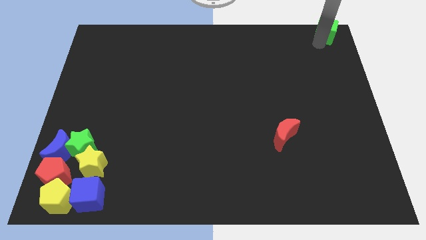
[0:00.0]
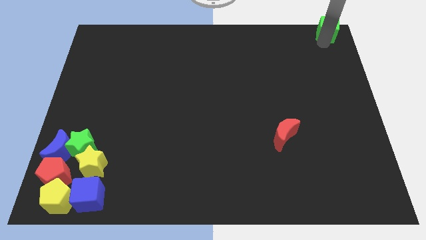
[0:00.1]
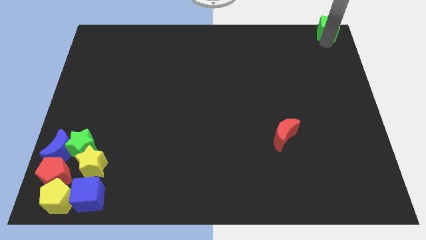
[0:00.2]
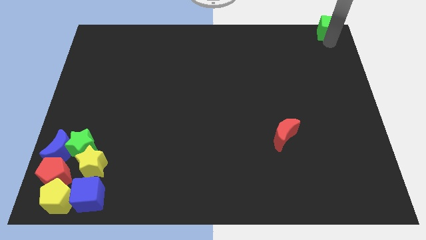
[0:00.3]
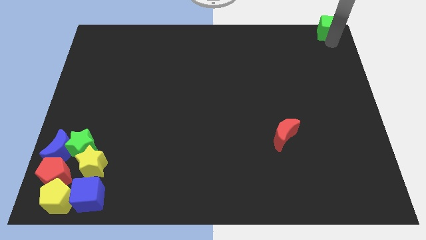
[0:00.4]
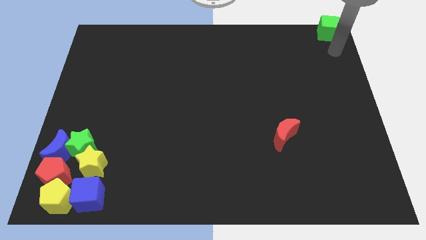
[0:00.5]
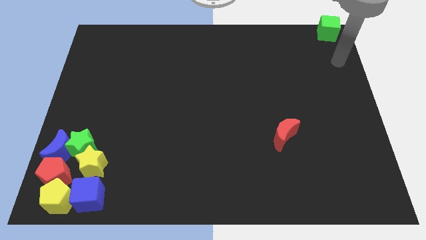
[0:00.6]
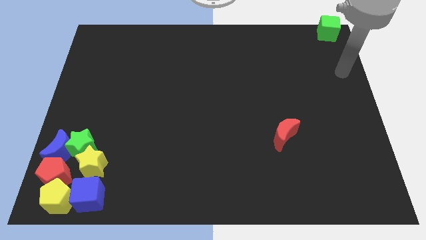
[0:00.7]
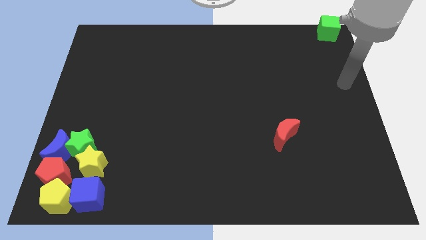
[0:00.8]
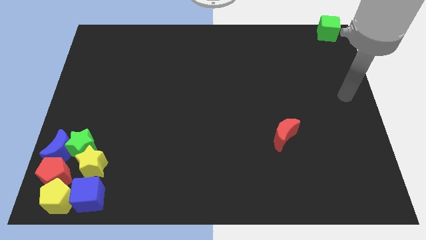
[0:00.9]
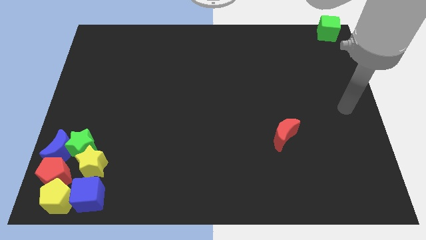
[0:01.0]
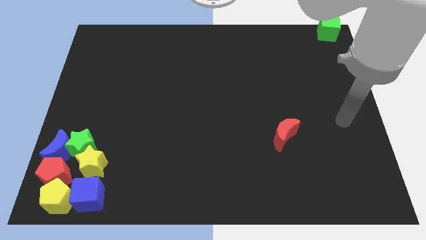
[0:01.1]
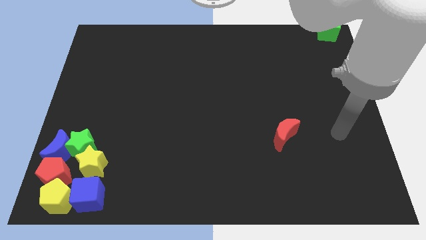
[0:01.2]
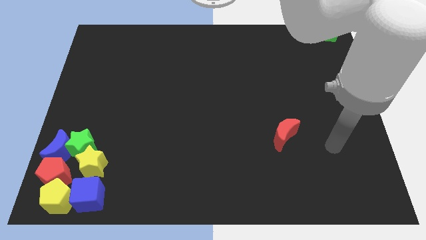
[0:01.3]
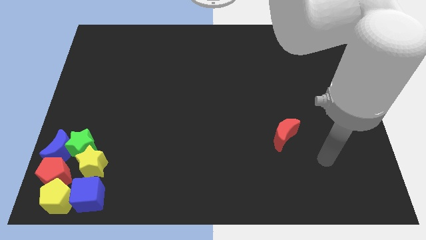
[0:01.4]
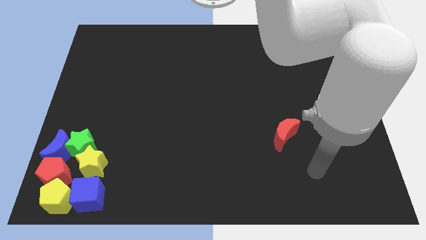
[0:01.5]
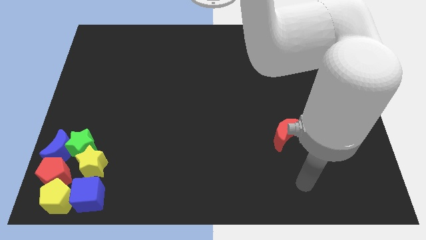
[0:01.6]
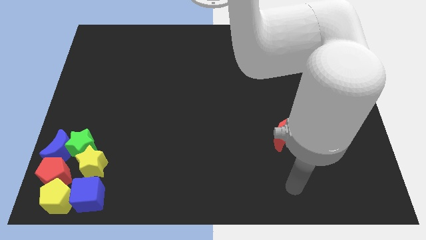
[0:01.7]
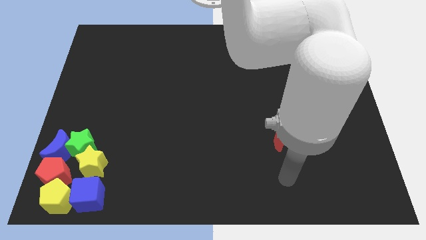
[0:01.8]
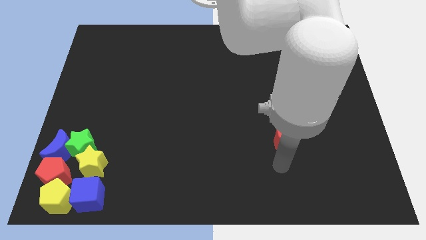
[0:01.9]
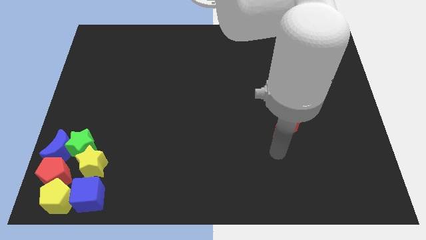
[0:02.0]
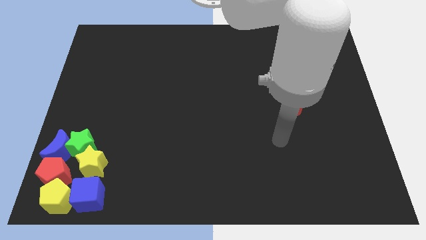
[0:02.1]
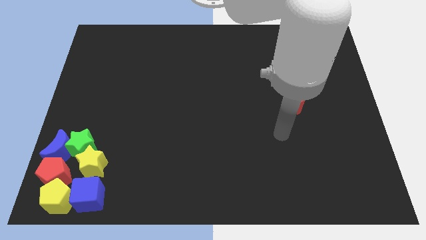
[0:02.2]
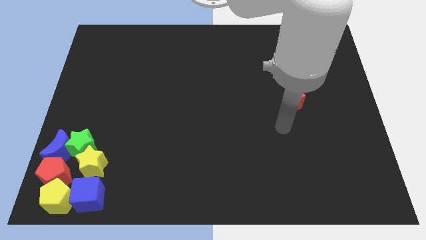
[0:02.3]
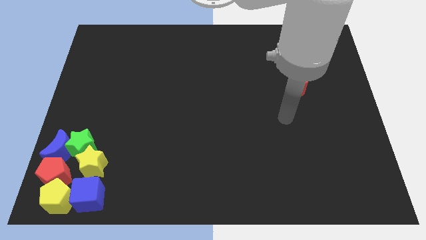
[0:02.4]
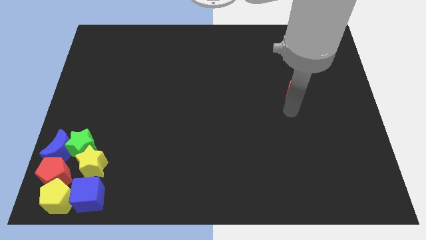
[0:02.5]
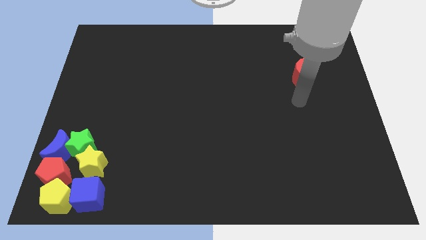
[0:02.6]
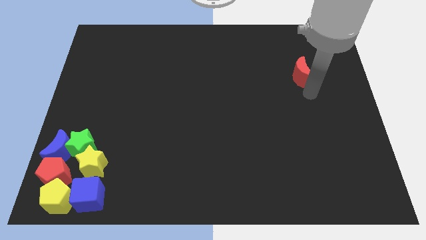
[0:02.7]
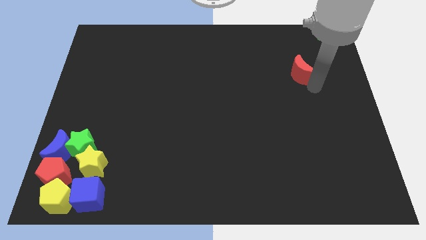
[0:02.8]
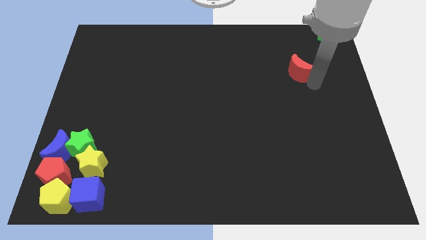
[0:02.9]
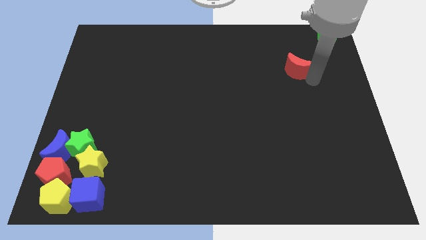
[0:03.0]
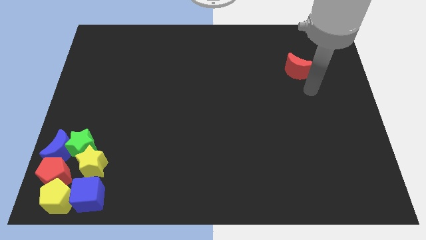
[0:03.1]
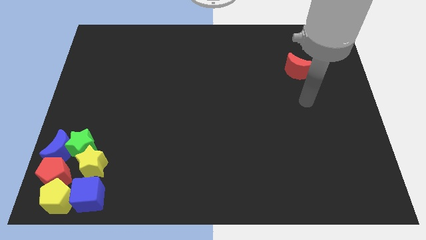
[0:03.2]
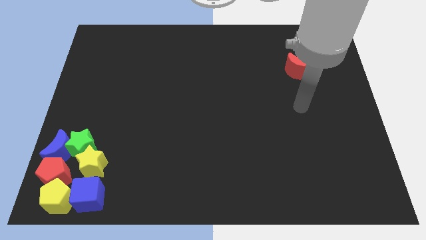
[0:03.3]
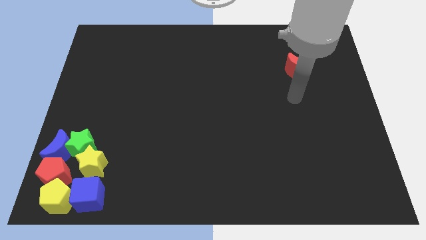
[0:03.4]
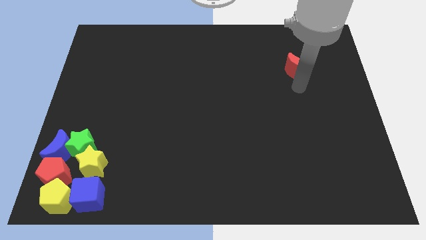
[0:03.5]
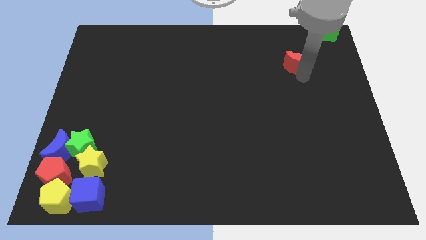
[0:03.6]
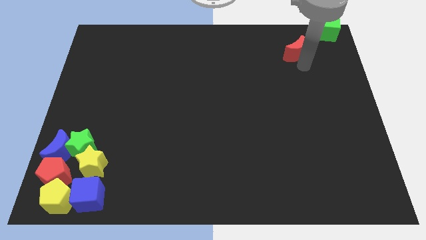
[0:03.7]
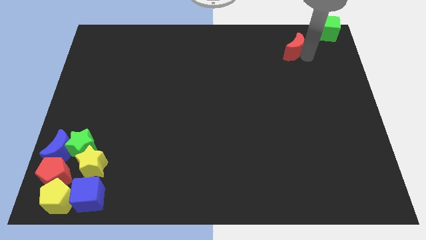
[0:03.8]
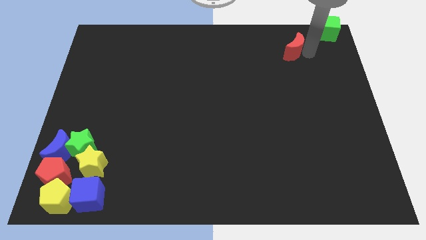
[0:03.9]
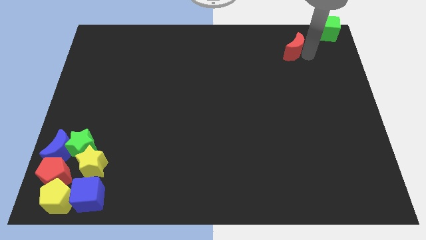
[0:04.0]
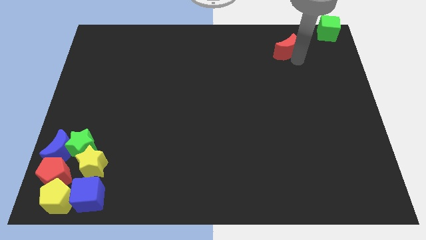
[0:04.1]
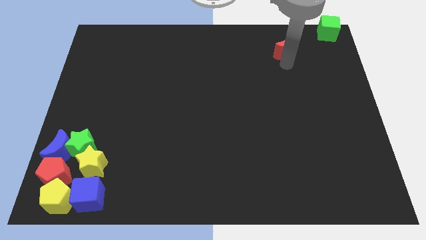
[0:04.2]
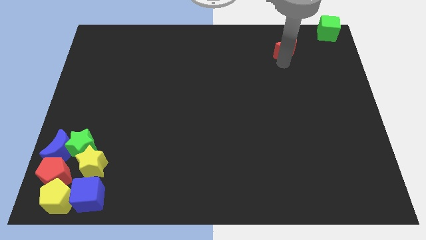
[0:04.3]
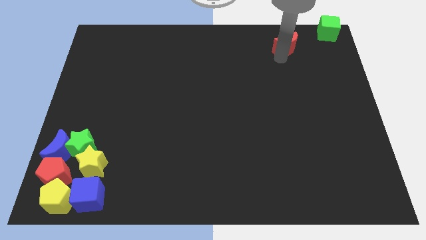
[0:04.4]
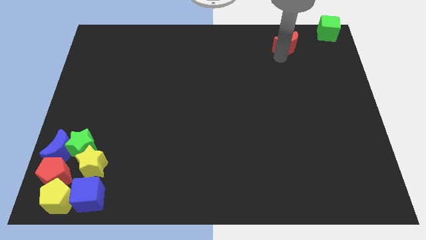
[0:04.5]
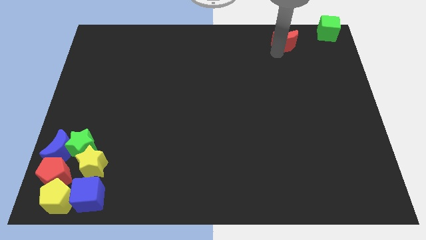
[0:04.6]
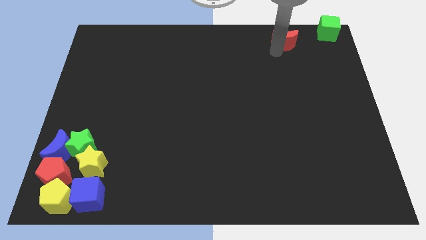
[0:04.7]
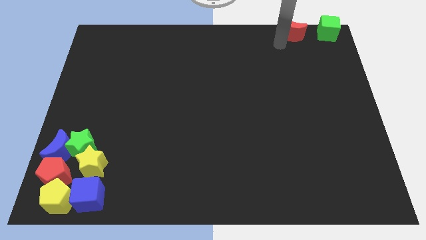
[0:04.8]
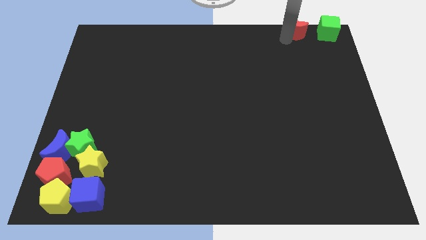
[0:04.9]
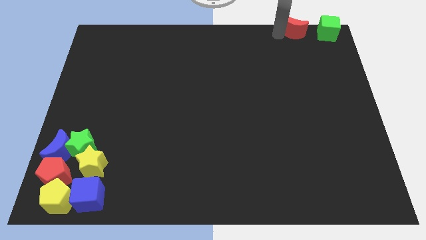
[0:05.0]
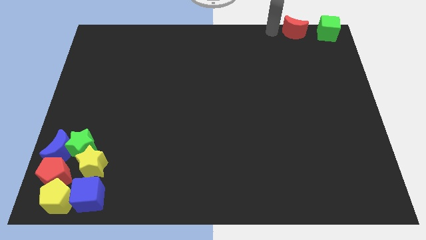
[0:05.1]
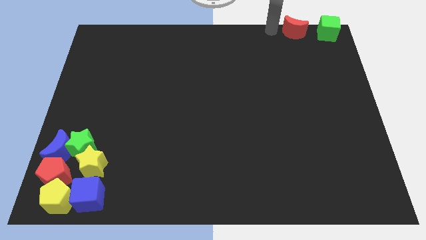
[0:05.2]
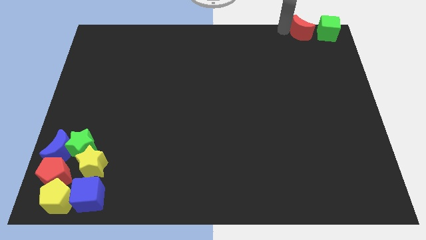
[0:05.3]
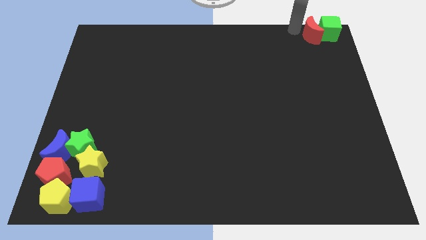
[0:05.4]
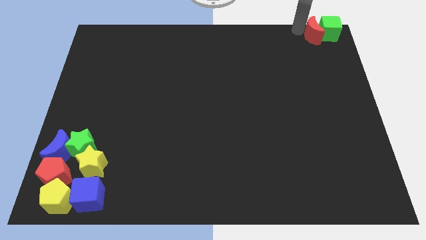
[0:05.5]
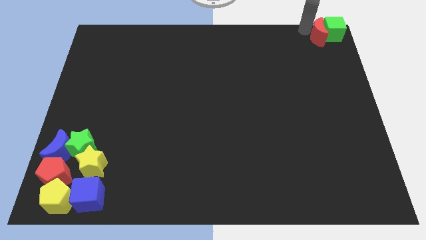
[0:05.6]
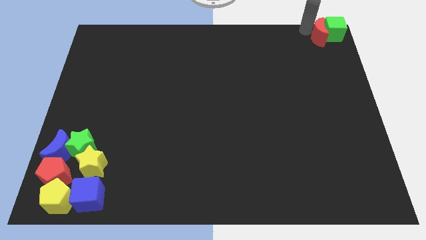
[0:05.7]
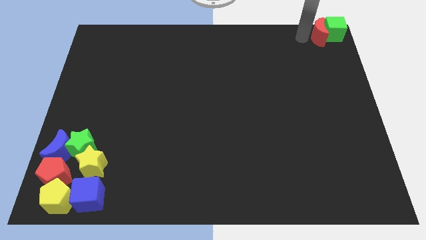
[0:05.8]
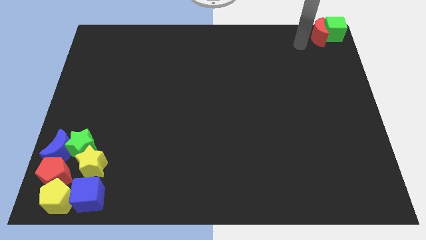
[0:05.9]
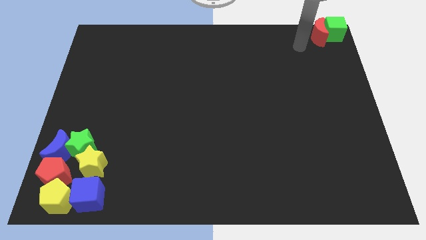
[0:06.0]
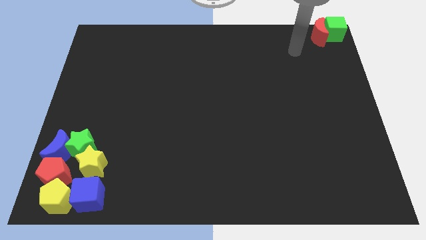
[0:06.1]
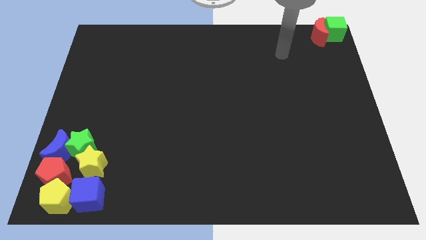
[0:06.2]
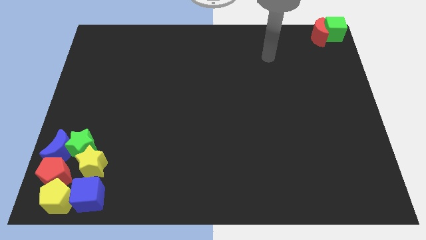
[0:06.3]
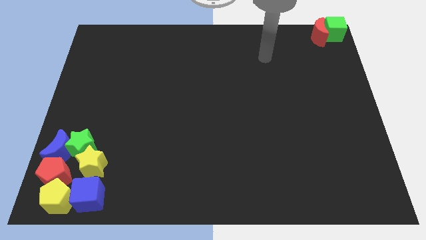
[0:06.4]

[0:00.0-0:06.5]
place red moon into green cube

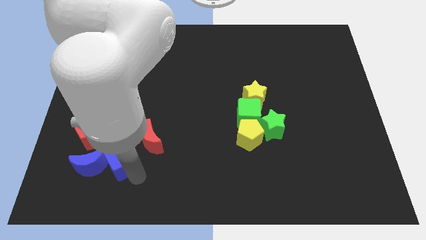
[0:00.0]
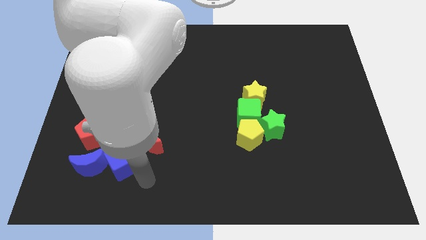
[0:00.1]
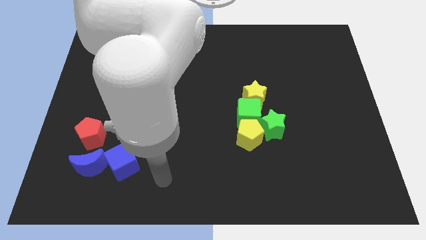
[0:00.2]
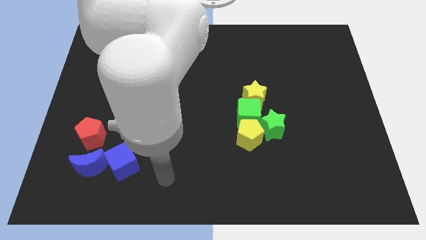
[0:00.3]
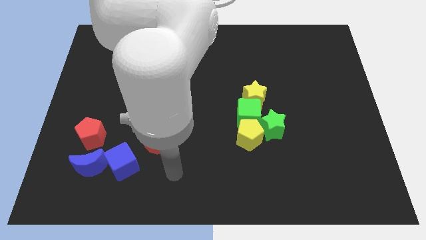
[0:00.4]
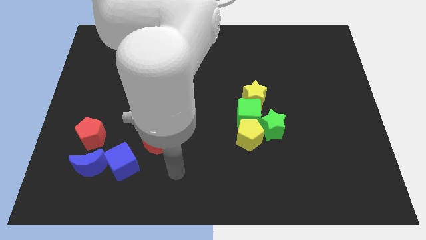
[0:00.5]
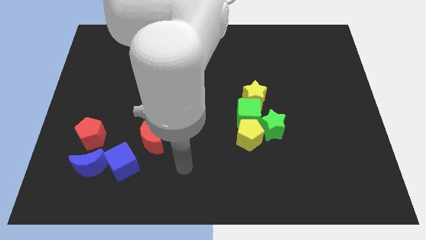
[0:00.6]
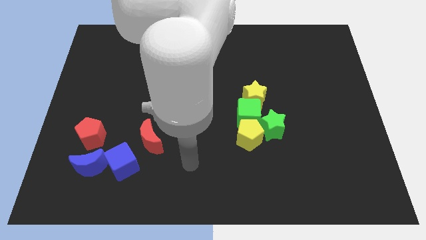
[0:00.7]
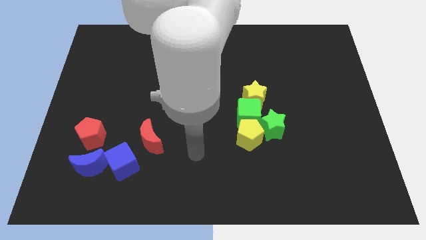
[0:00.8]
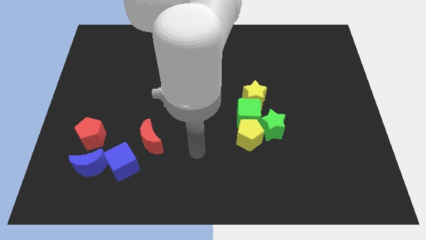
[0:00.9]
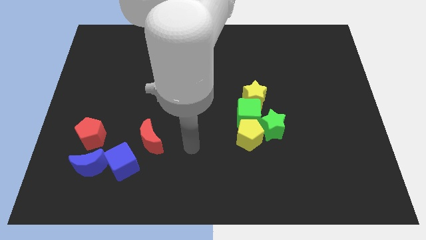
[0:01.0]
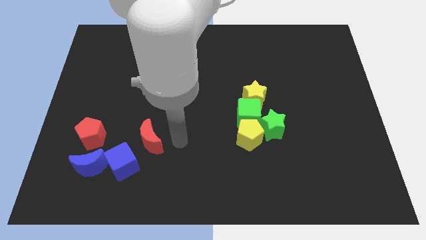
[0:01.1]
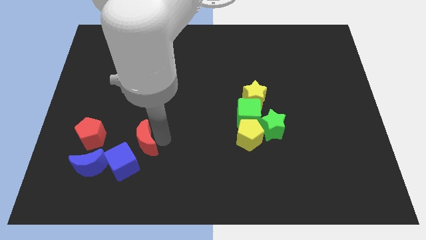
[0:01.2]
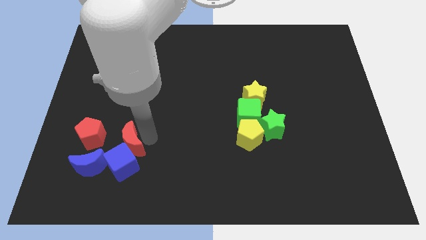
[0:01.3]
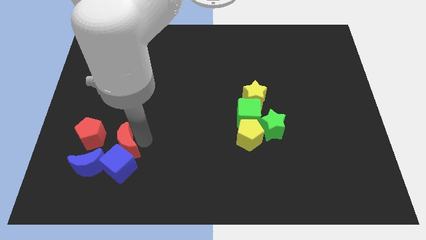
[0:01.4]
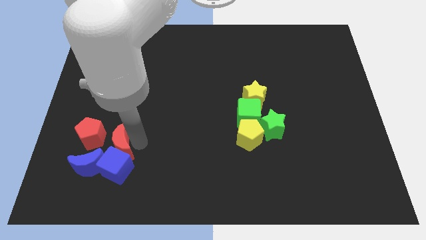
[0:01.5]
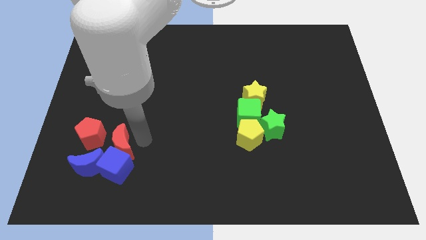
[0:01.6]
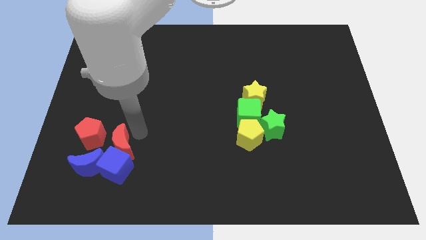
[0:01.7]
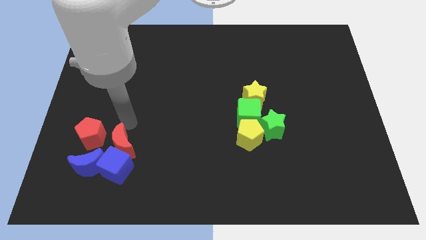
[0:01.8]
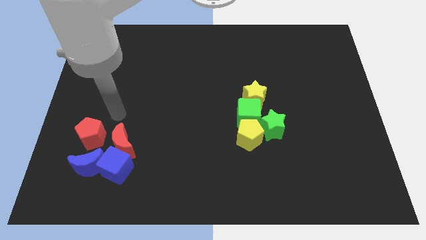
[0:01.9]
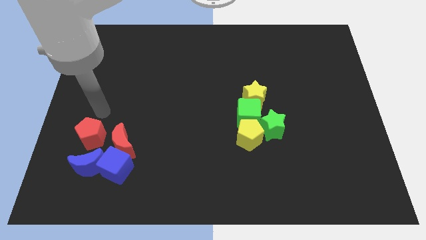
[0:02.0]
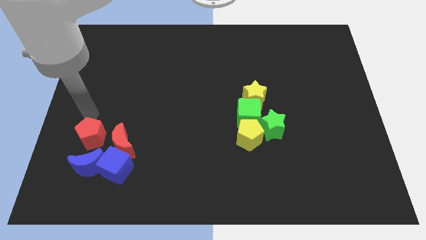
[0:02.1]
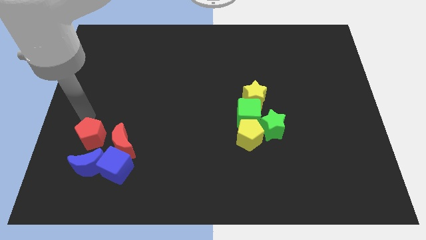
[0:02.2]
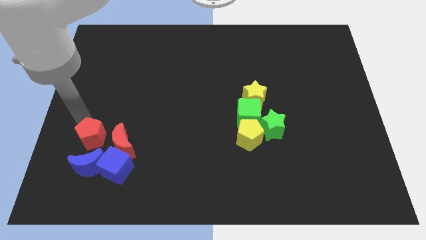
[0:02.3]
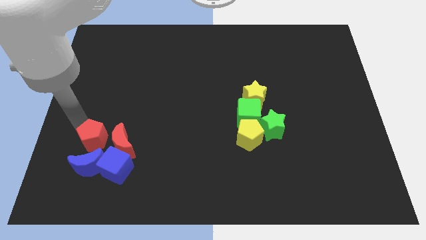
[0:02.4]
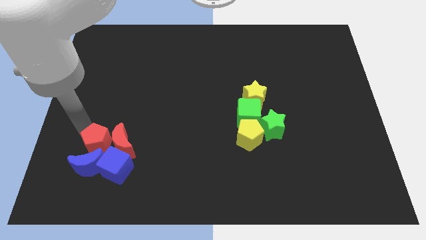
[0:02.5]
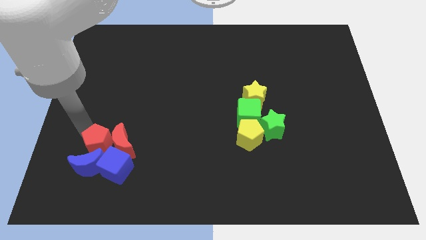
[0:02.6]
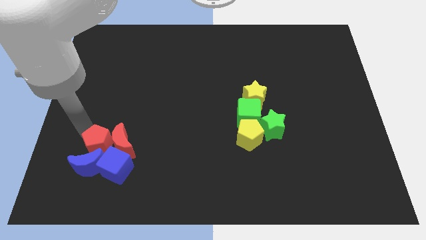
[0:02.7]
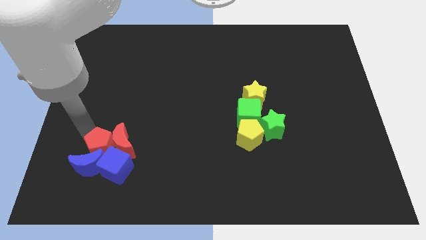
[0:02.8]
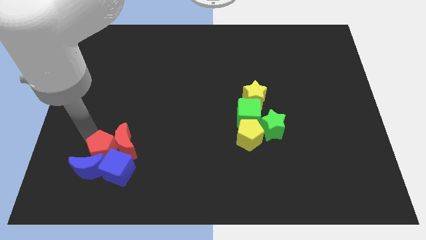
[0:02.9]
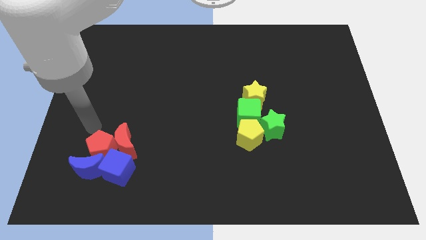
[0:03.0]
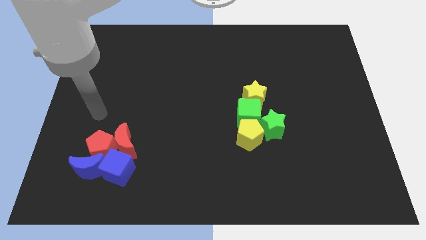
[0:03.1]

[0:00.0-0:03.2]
push the red pentagon into the blue cube
